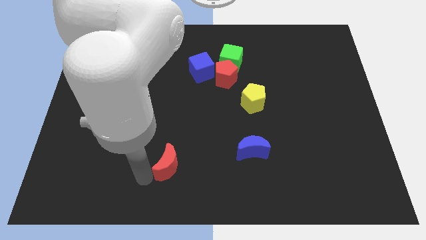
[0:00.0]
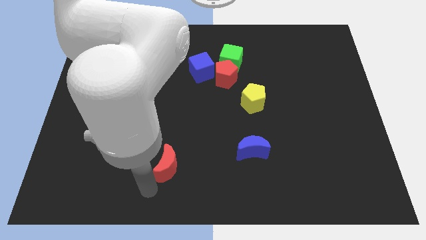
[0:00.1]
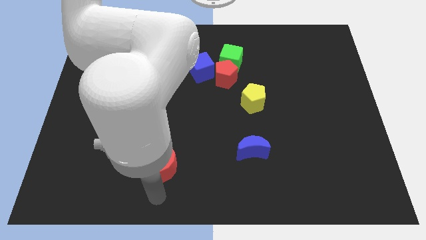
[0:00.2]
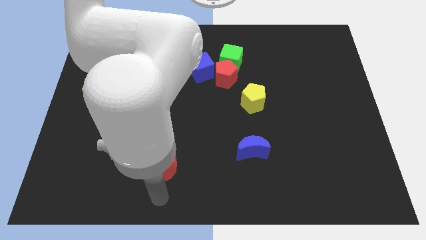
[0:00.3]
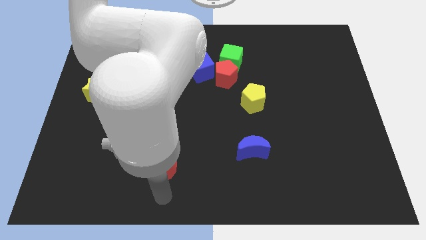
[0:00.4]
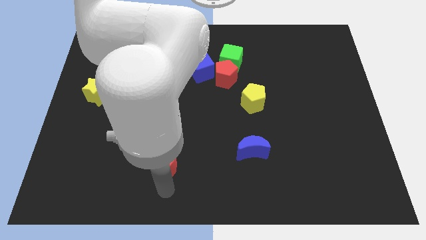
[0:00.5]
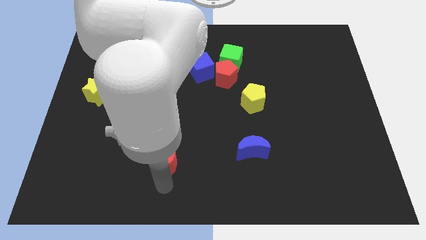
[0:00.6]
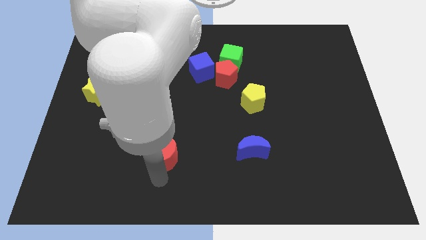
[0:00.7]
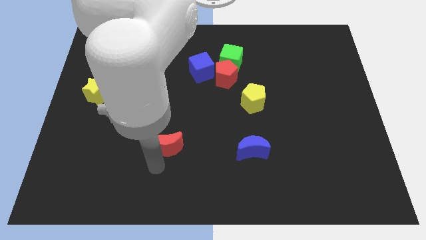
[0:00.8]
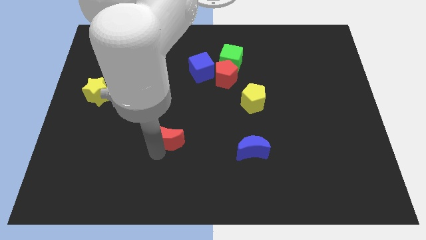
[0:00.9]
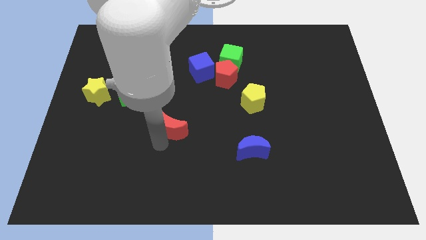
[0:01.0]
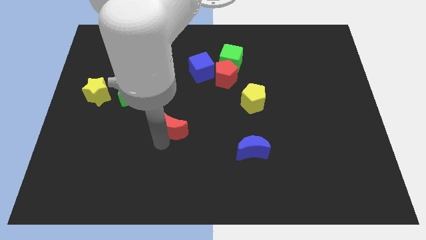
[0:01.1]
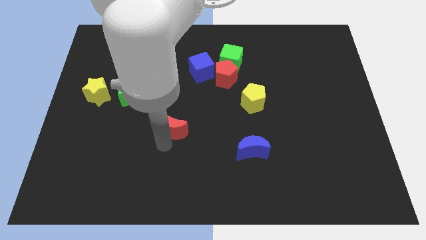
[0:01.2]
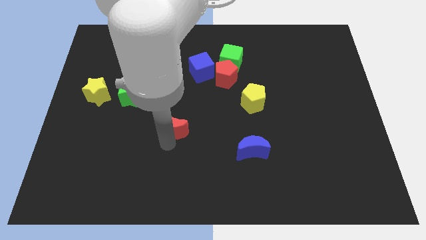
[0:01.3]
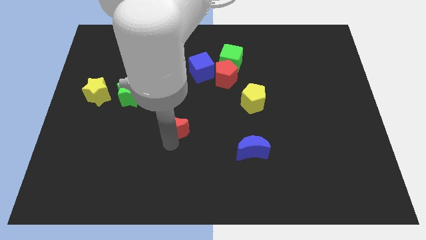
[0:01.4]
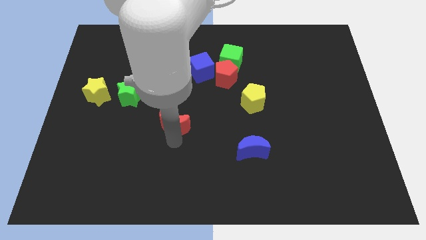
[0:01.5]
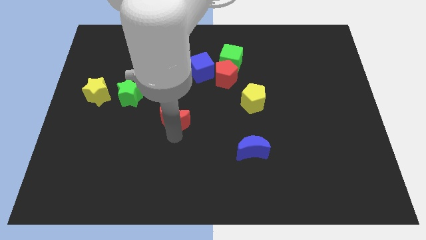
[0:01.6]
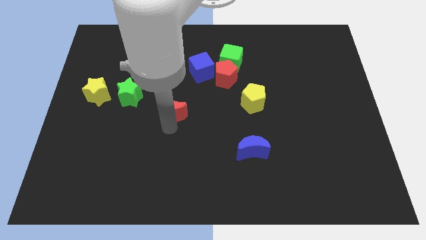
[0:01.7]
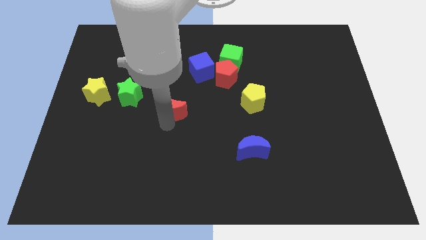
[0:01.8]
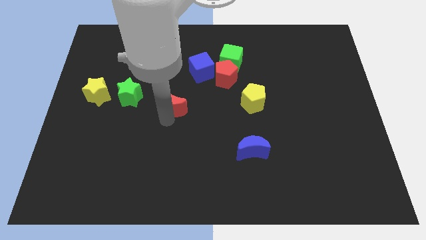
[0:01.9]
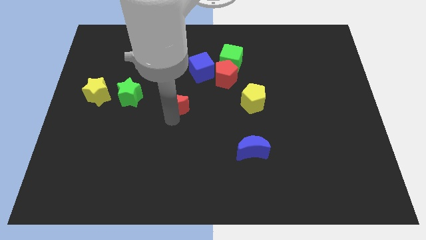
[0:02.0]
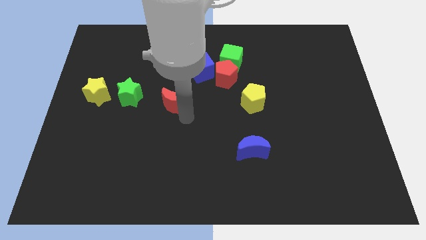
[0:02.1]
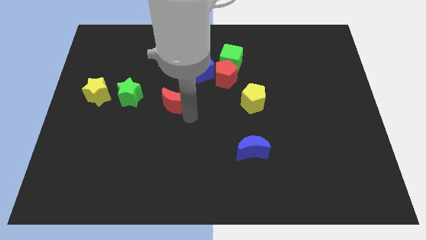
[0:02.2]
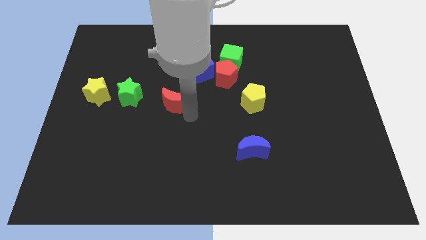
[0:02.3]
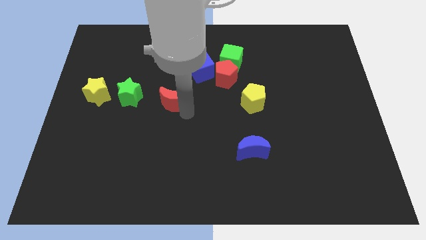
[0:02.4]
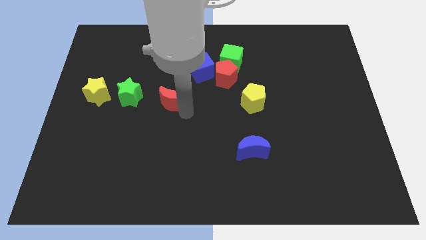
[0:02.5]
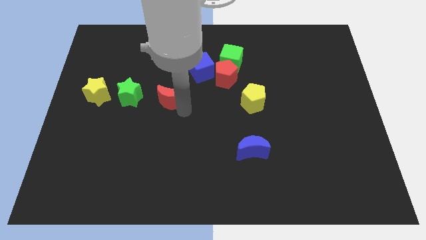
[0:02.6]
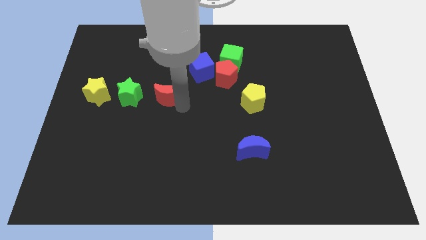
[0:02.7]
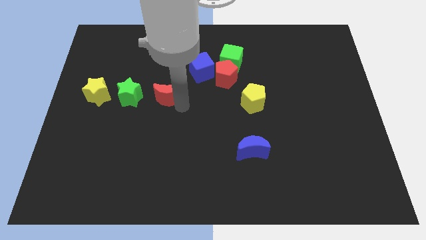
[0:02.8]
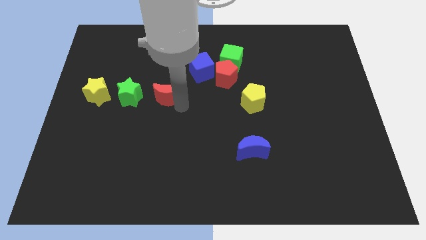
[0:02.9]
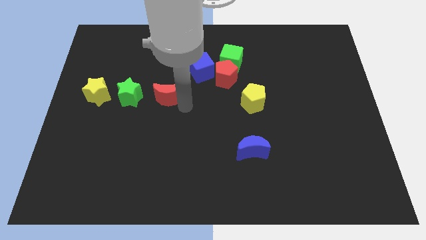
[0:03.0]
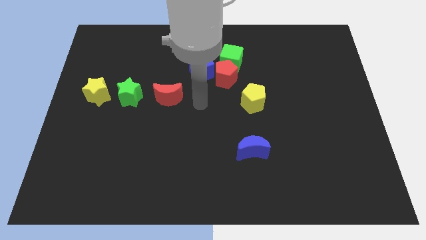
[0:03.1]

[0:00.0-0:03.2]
push red moon parallel right to green star

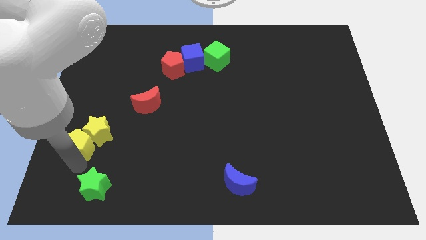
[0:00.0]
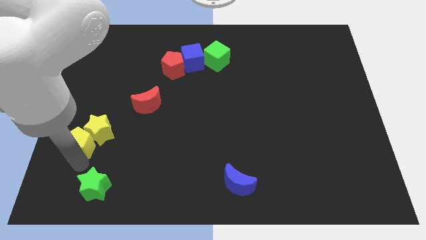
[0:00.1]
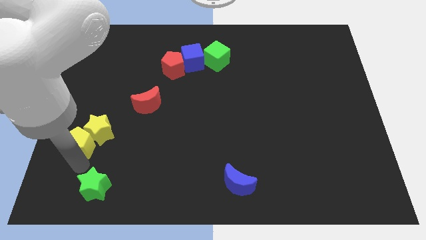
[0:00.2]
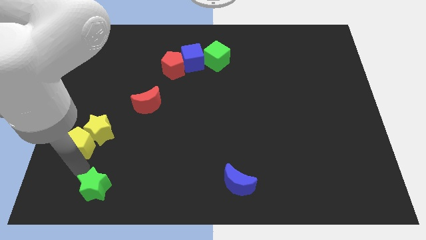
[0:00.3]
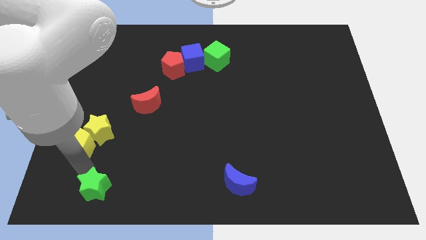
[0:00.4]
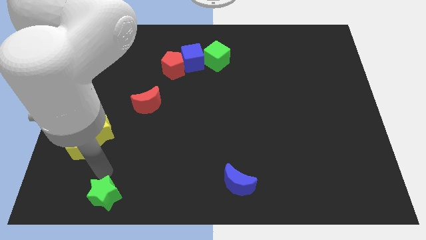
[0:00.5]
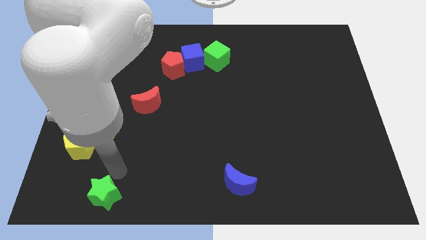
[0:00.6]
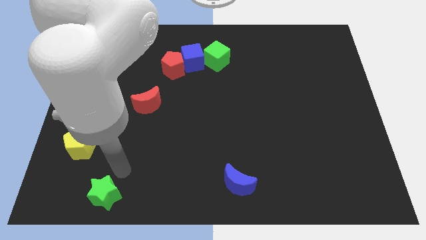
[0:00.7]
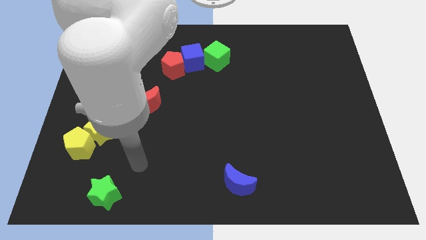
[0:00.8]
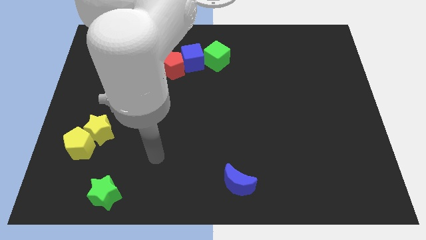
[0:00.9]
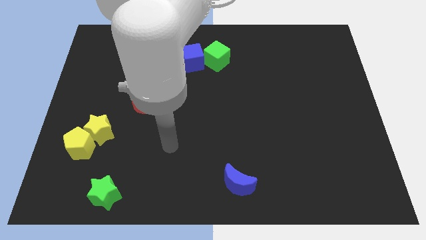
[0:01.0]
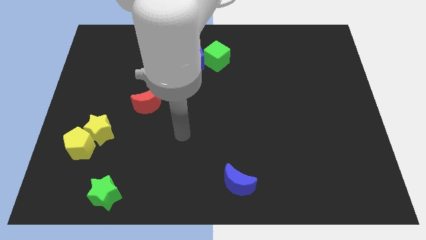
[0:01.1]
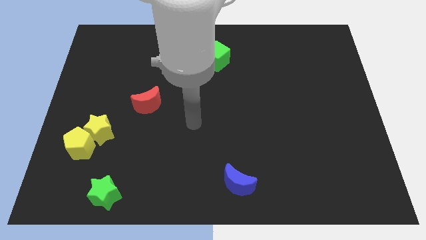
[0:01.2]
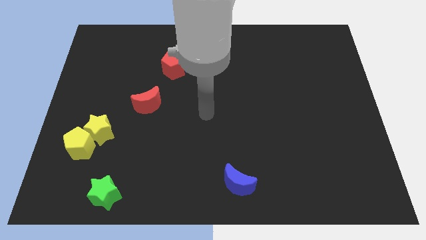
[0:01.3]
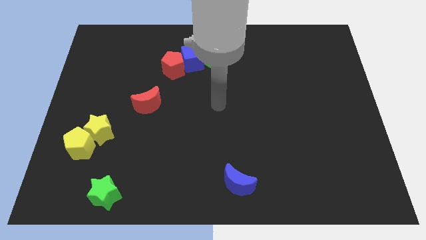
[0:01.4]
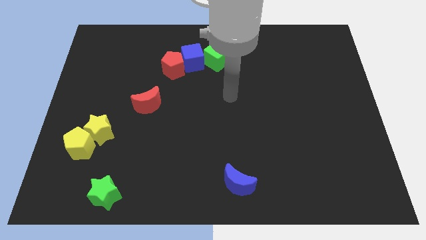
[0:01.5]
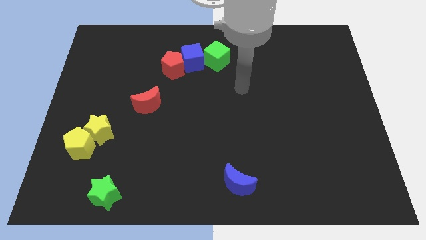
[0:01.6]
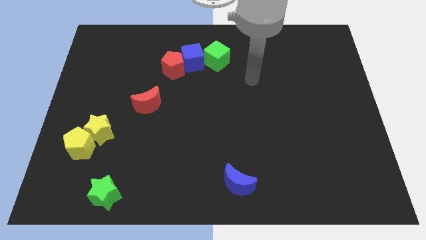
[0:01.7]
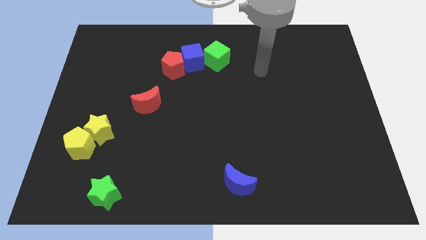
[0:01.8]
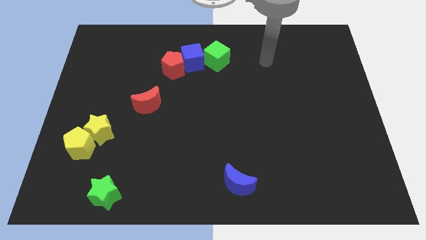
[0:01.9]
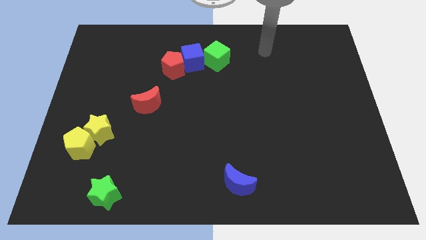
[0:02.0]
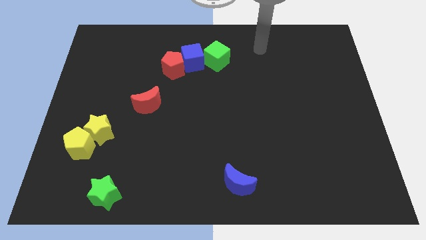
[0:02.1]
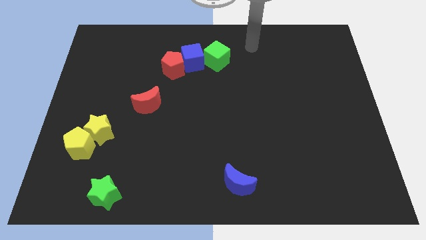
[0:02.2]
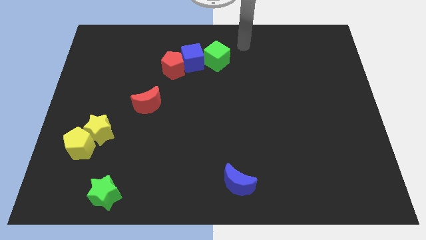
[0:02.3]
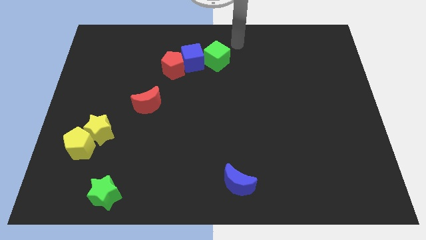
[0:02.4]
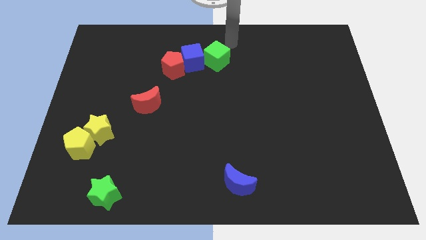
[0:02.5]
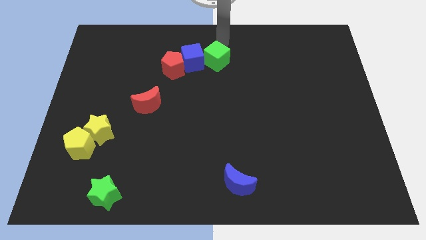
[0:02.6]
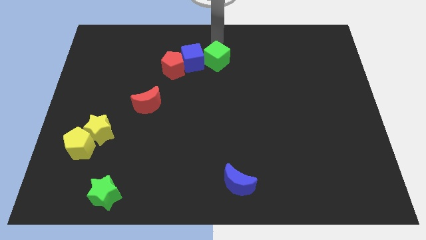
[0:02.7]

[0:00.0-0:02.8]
push the green star towards the bottom and move away

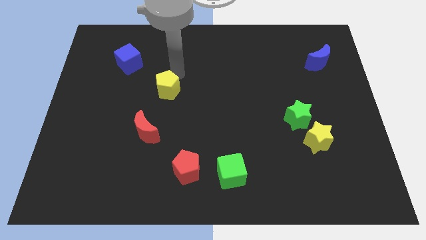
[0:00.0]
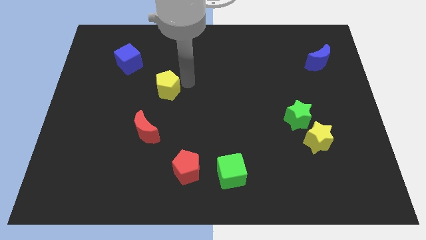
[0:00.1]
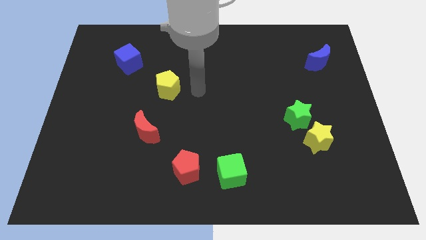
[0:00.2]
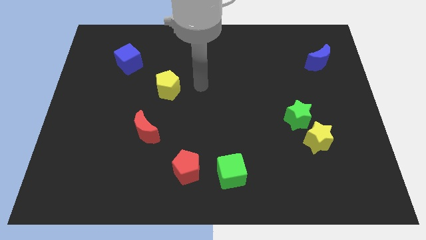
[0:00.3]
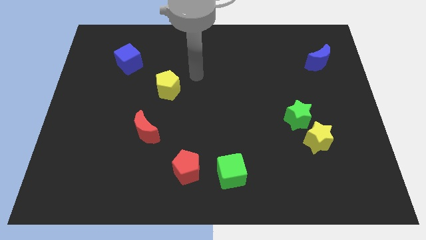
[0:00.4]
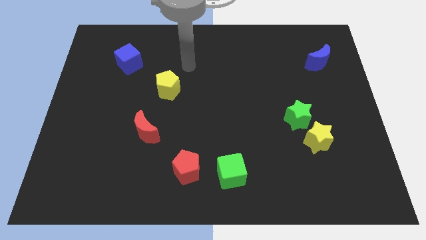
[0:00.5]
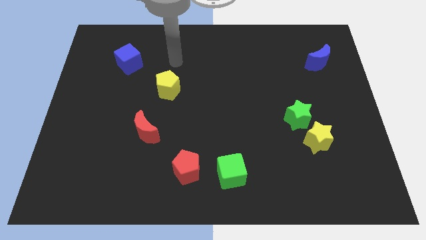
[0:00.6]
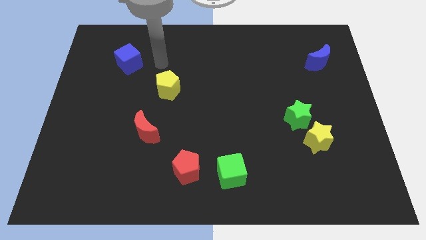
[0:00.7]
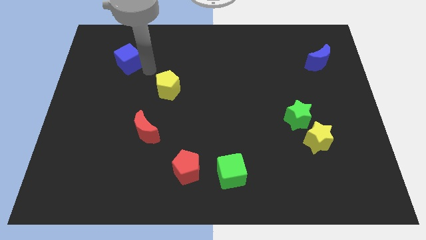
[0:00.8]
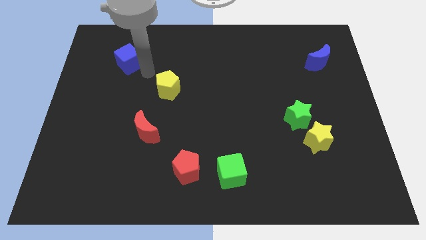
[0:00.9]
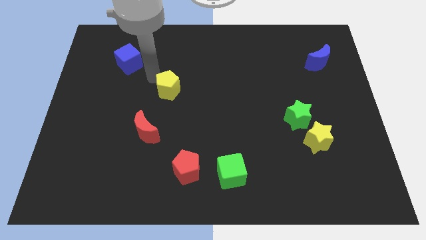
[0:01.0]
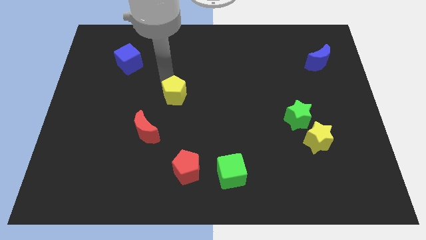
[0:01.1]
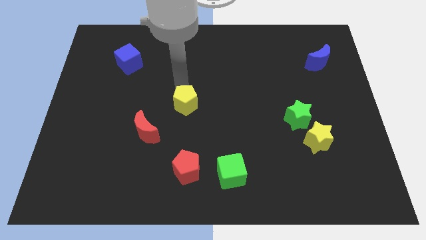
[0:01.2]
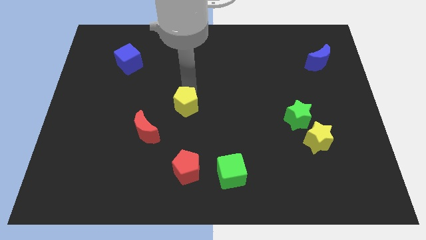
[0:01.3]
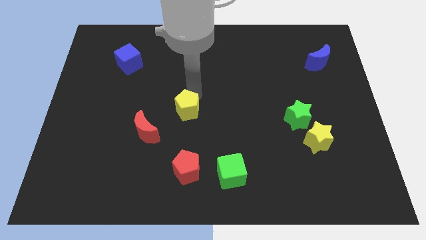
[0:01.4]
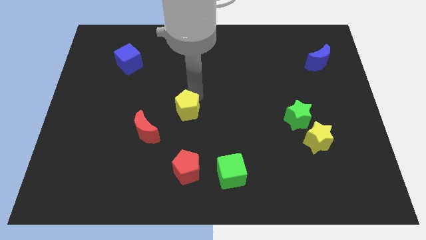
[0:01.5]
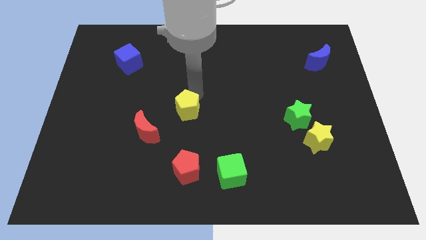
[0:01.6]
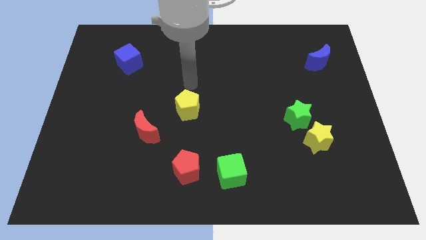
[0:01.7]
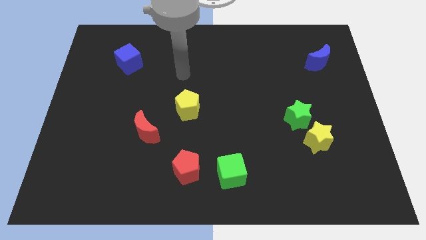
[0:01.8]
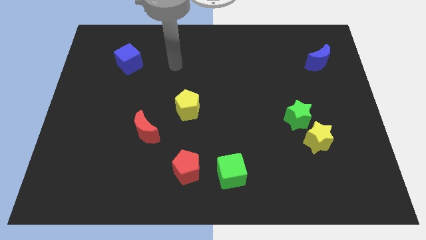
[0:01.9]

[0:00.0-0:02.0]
push yellow pentagon vertical to the red pentagon

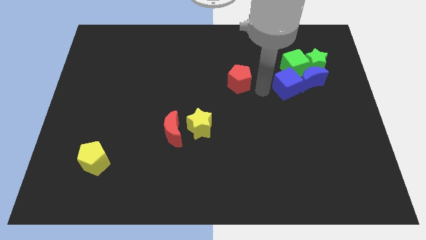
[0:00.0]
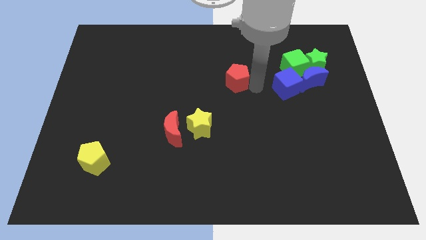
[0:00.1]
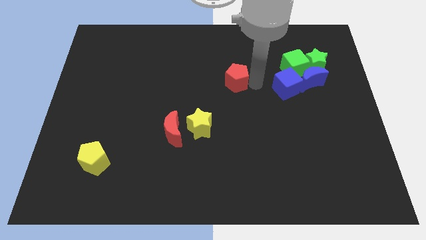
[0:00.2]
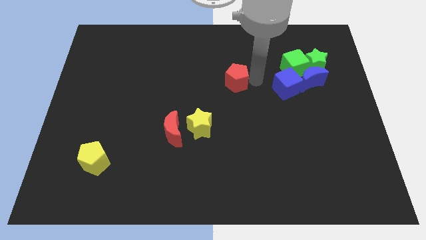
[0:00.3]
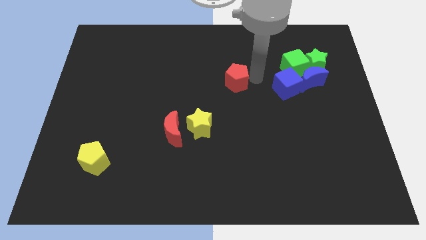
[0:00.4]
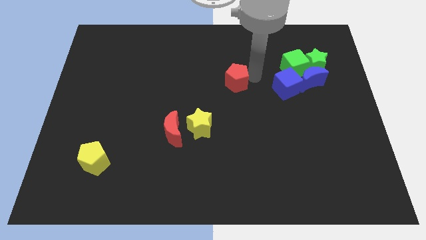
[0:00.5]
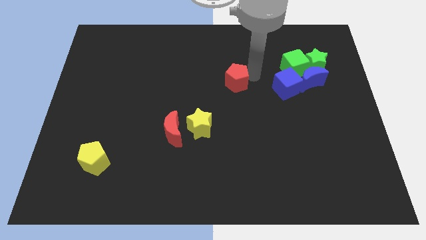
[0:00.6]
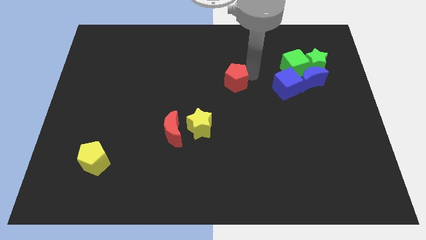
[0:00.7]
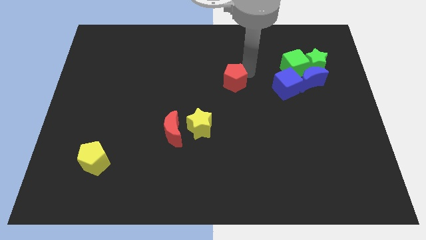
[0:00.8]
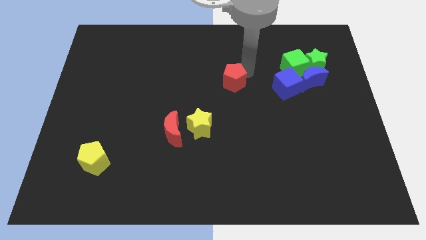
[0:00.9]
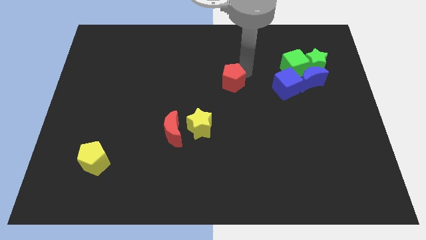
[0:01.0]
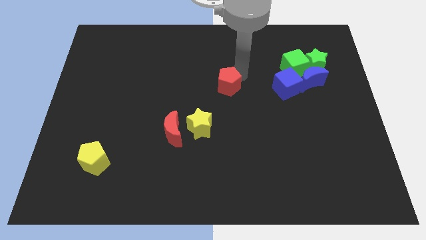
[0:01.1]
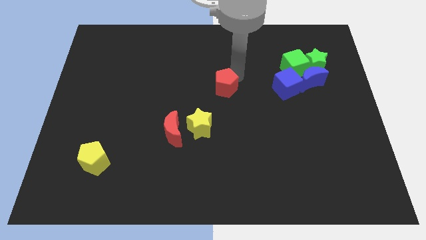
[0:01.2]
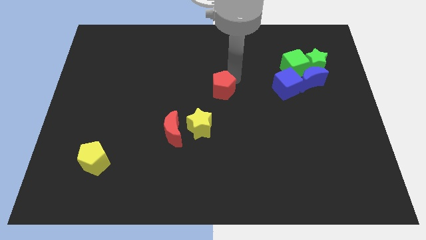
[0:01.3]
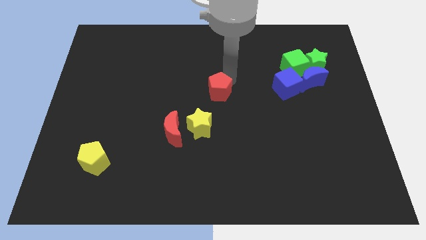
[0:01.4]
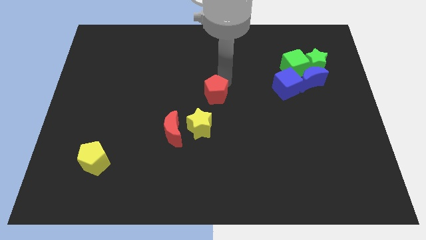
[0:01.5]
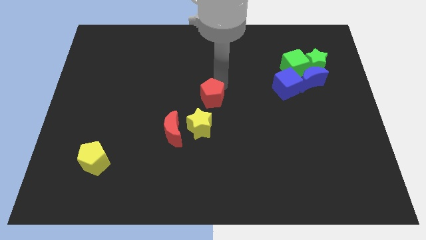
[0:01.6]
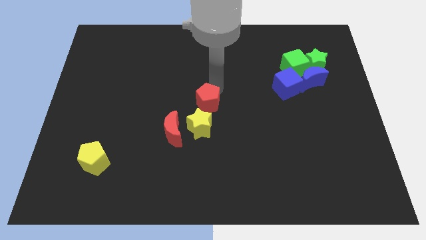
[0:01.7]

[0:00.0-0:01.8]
move the red pentagon to the center of the board
